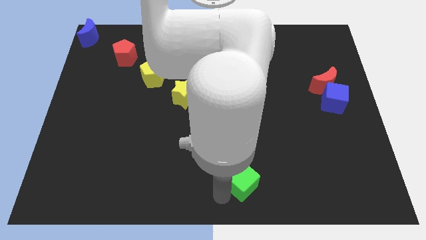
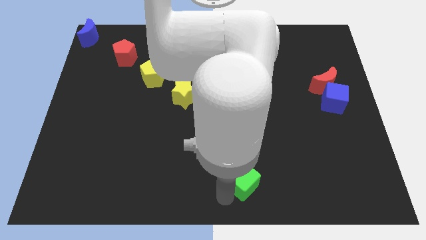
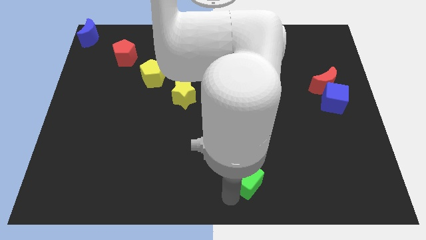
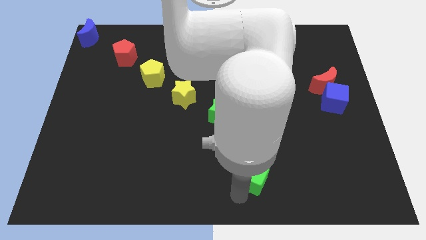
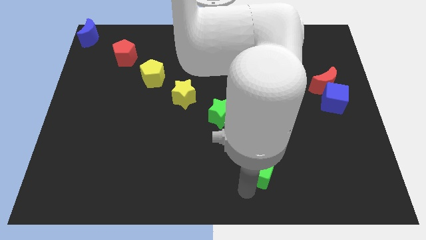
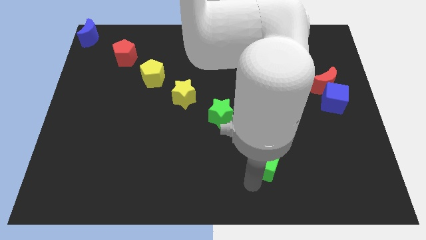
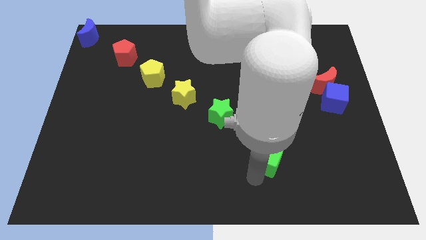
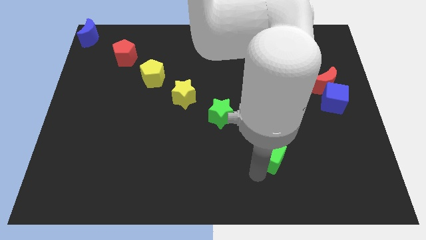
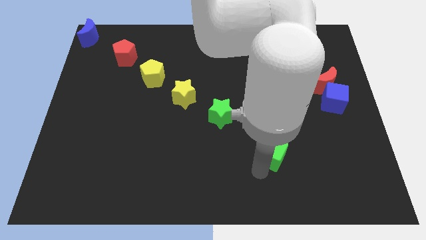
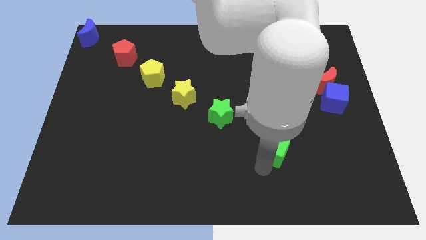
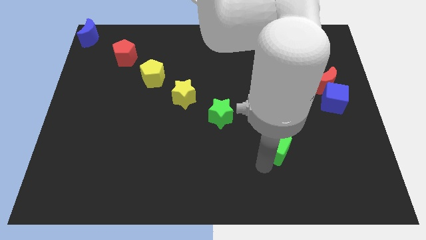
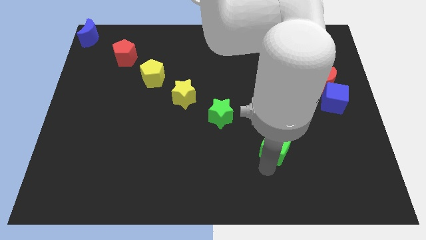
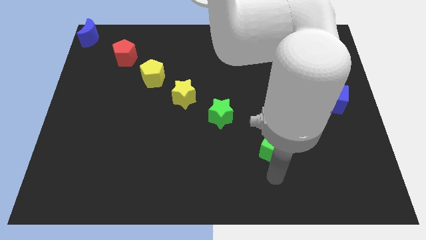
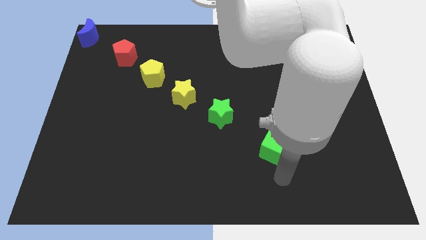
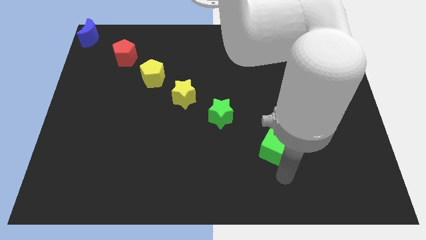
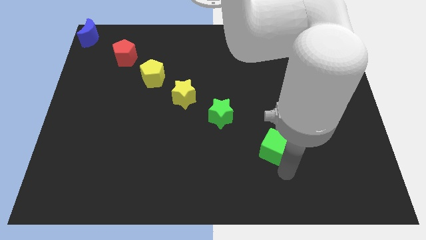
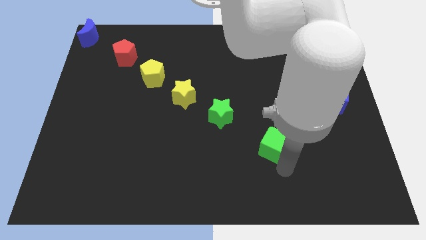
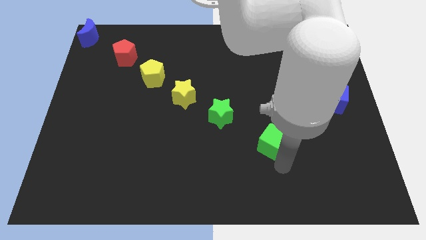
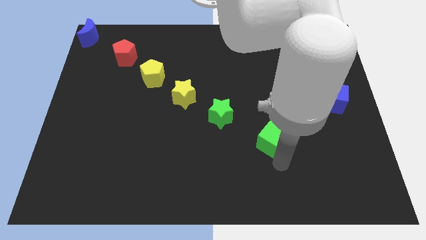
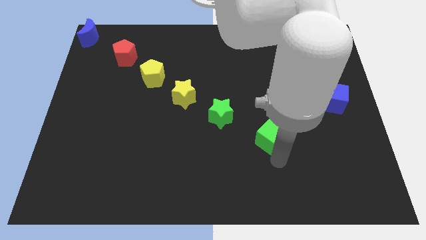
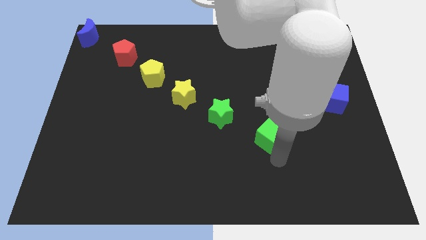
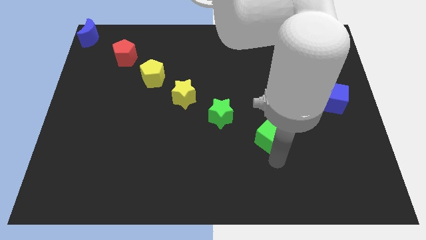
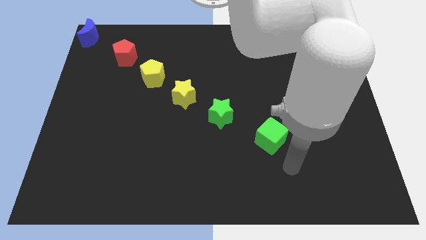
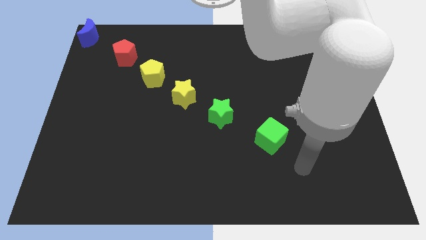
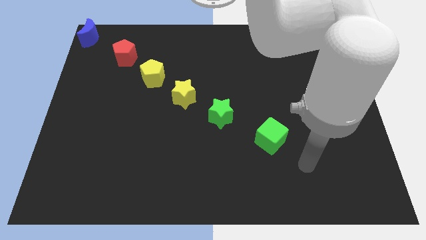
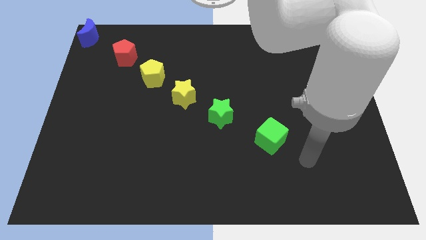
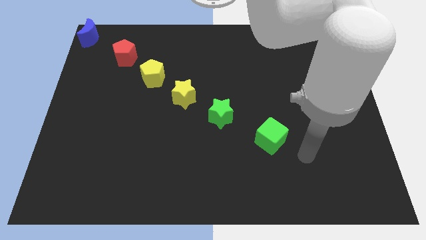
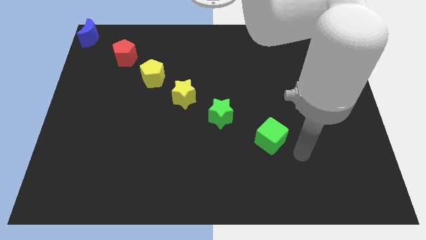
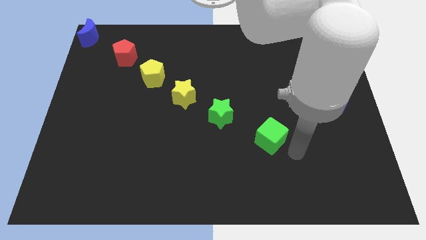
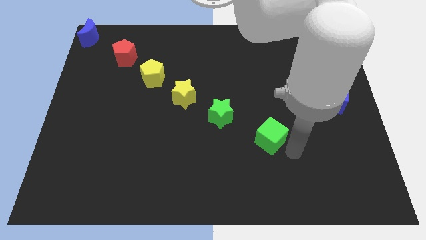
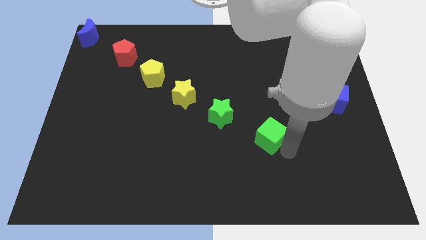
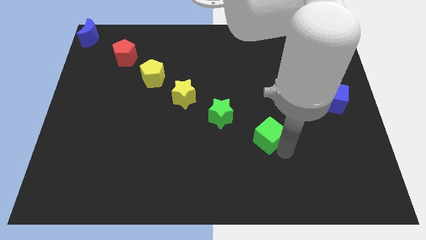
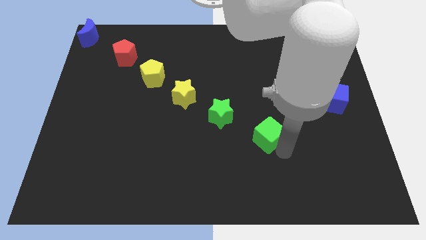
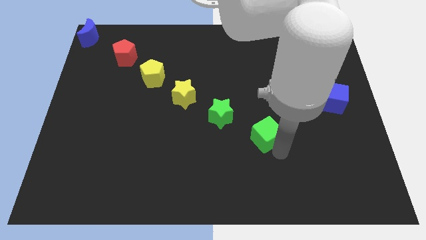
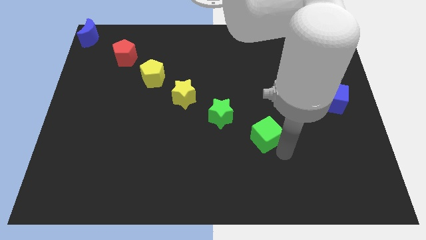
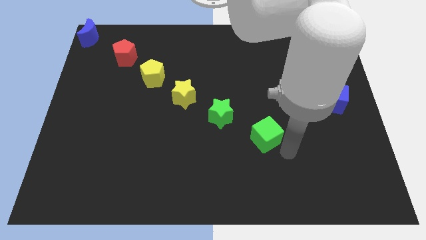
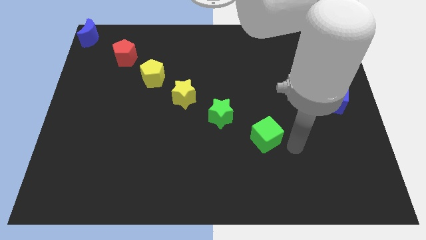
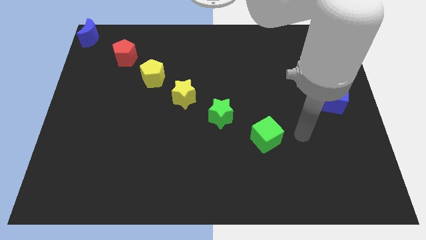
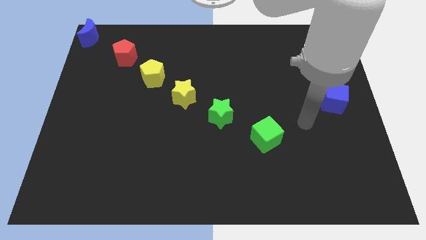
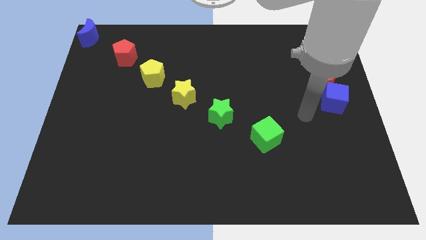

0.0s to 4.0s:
push green cube towards green star

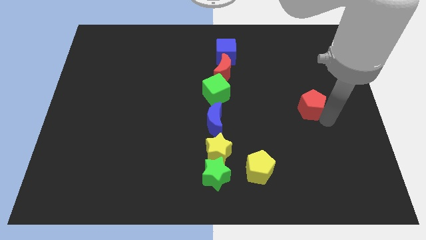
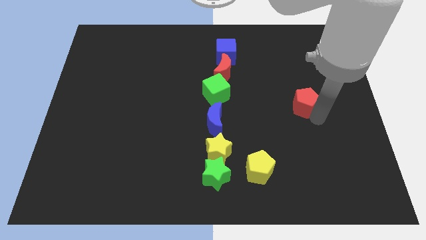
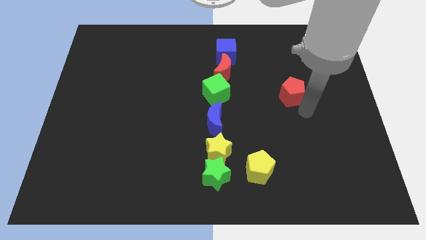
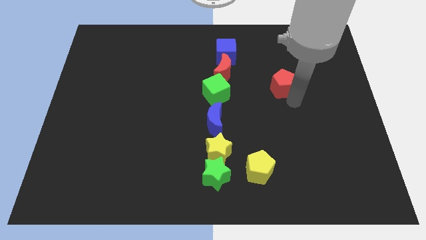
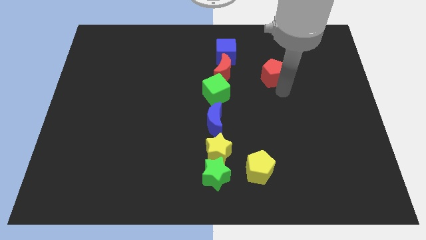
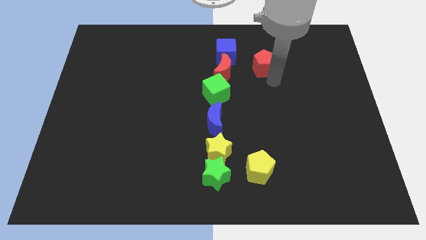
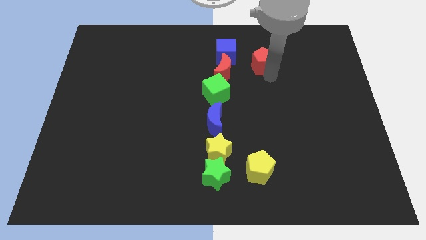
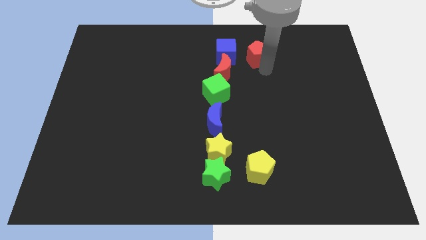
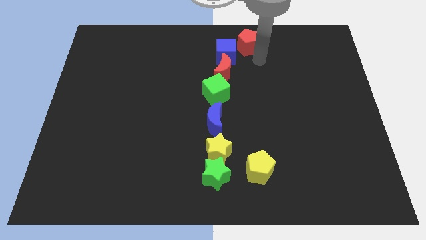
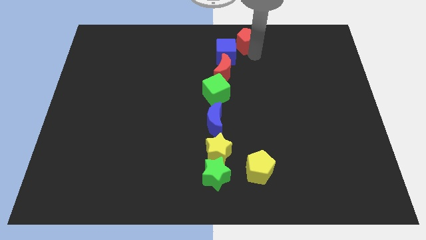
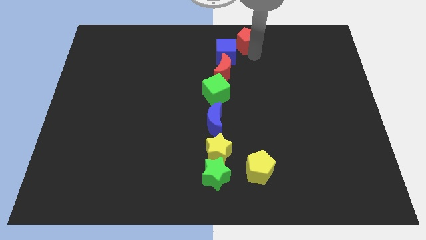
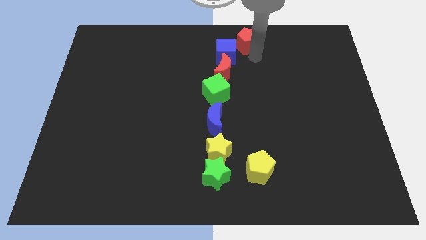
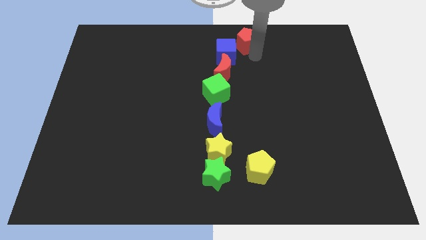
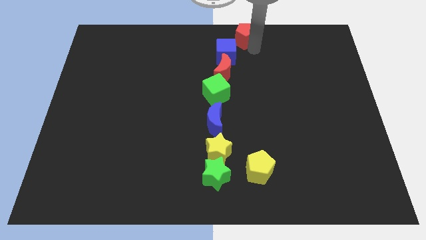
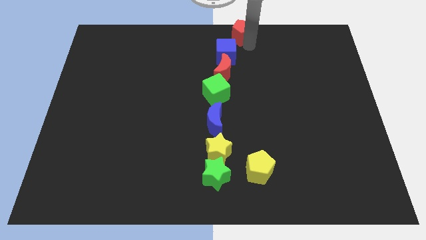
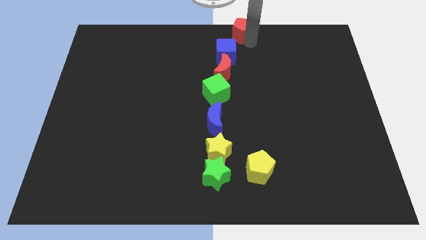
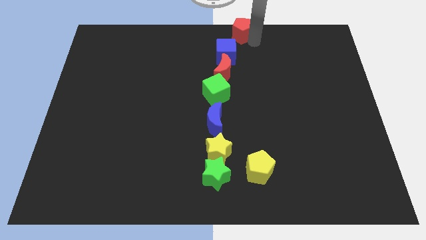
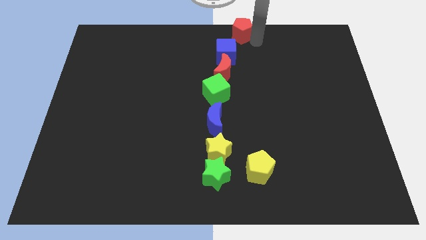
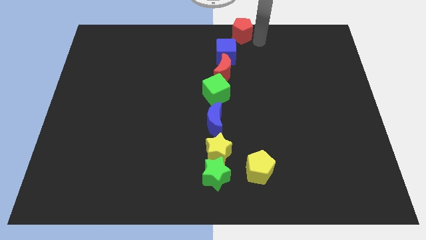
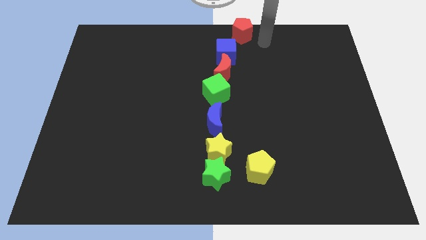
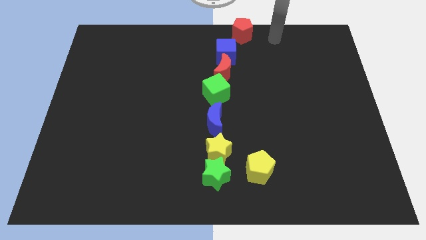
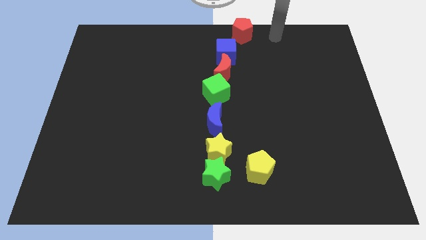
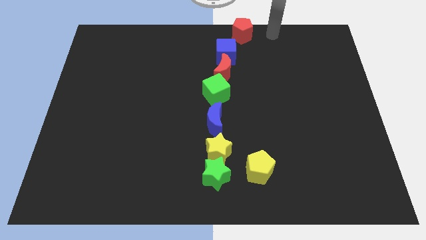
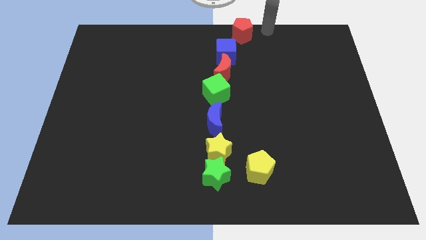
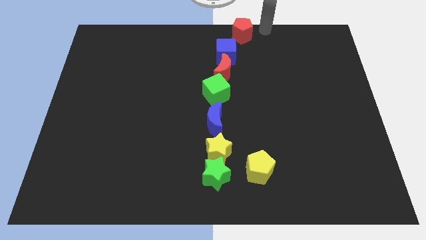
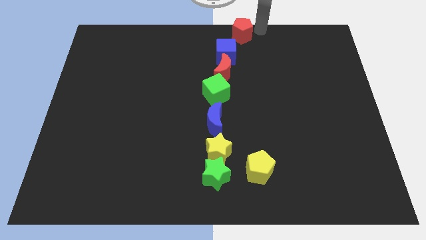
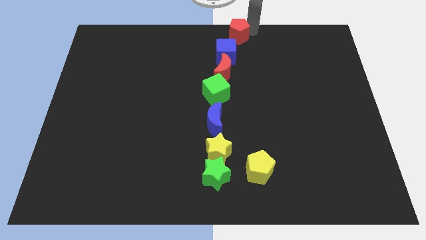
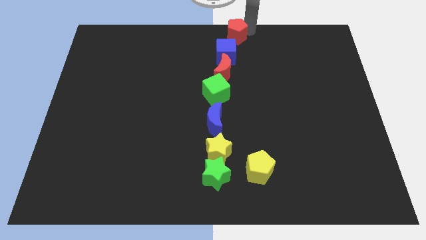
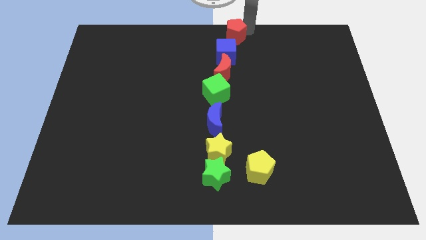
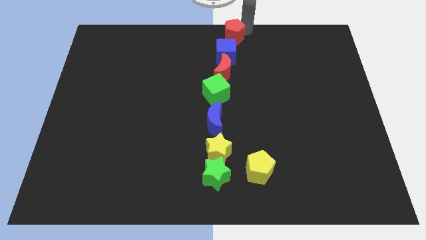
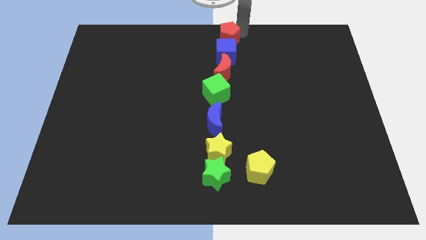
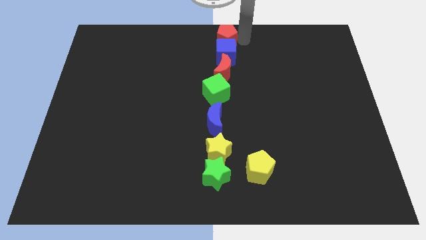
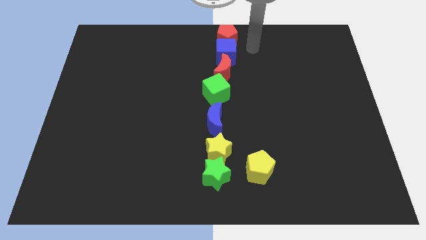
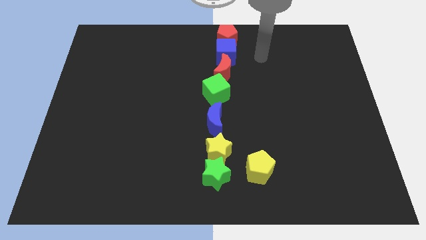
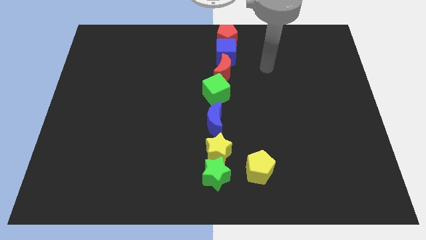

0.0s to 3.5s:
place the red pentagon to the top of the blue cube

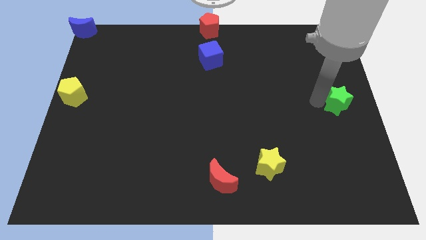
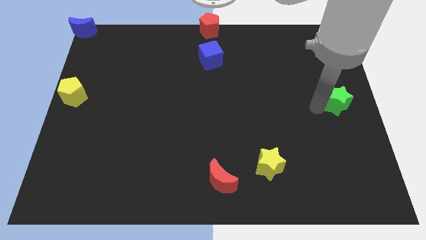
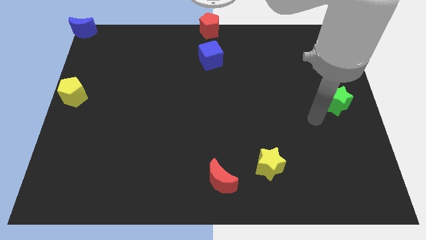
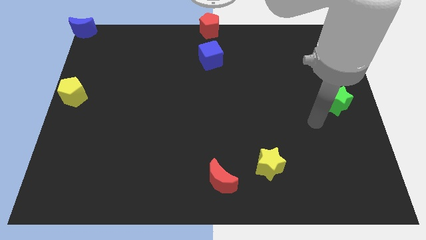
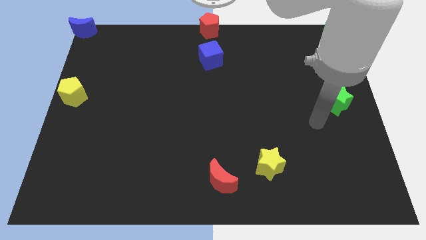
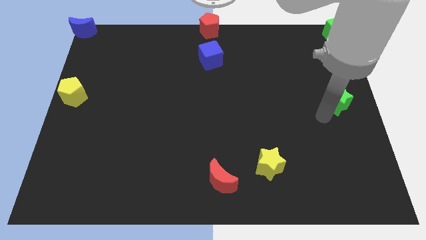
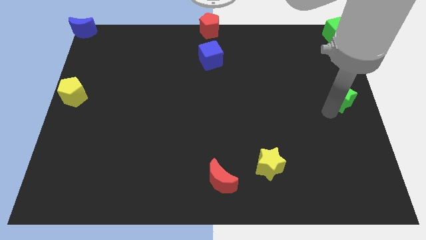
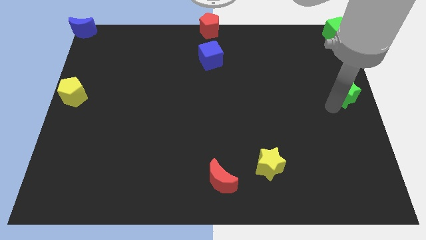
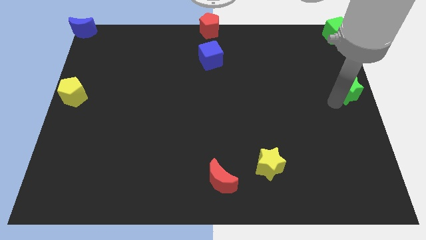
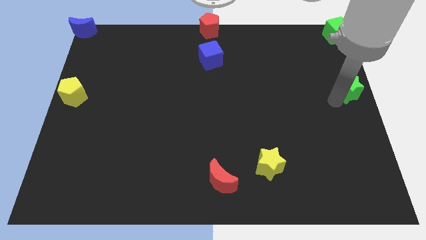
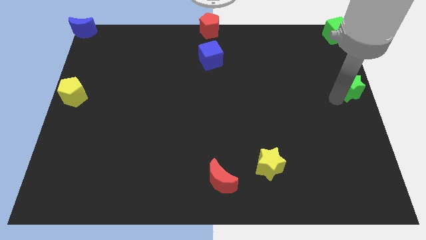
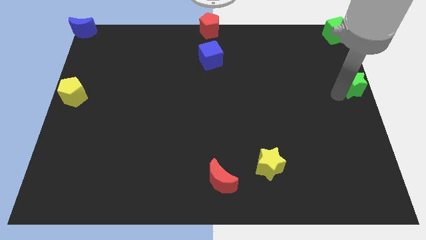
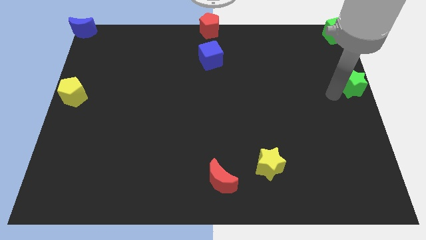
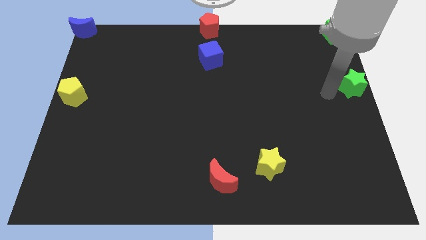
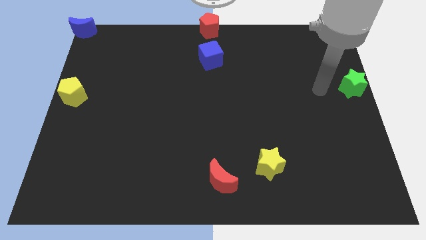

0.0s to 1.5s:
move the green star to the right center of the board
